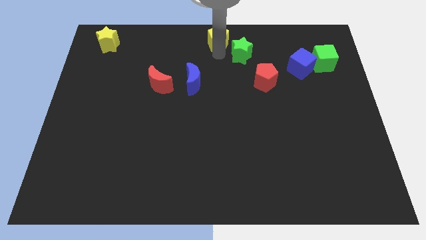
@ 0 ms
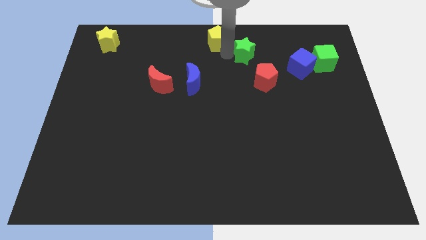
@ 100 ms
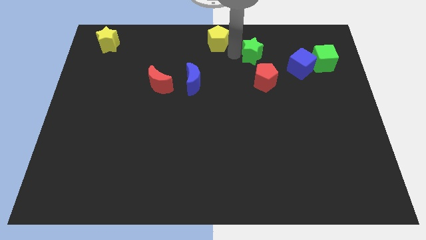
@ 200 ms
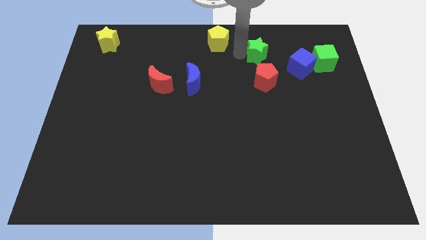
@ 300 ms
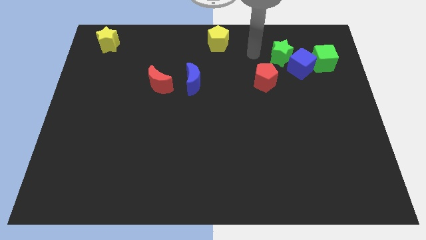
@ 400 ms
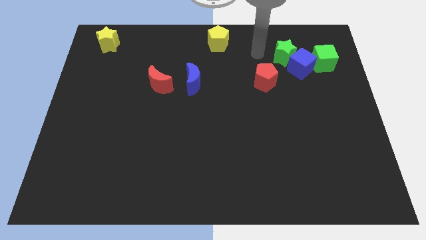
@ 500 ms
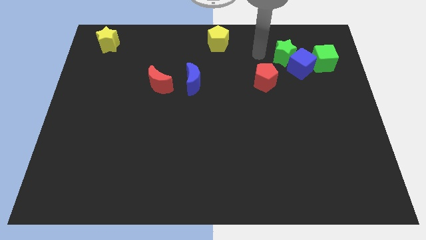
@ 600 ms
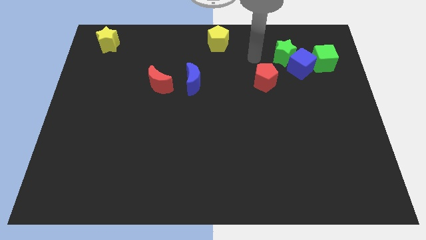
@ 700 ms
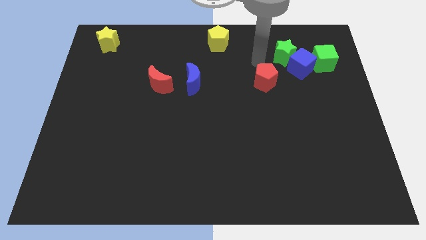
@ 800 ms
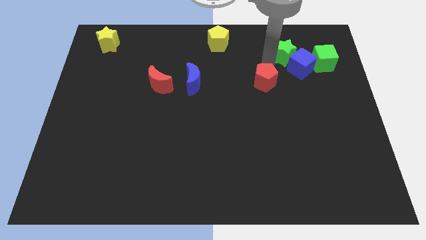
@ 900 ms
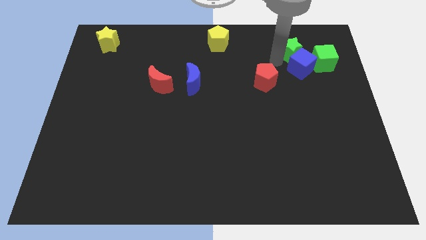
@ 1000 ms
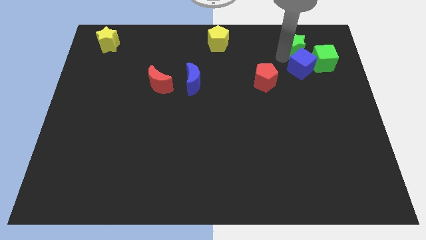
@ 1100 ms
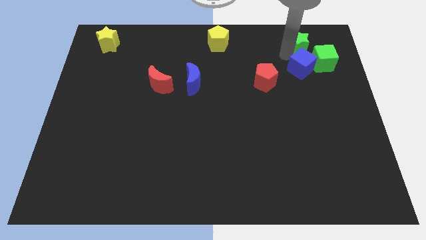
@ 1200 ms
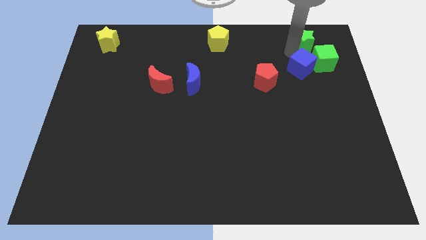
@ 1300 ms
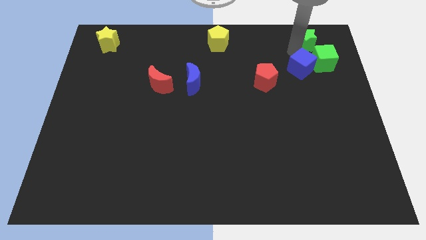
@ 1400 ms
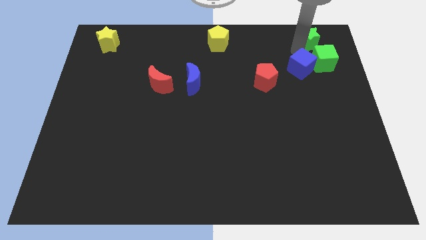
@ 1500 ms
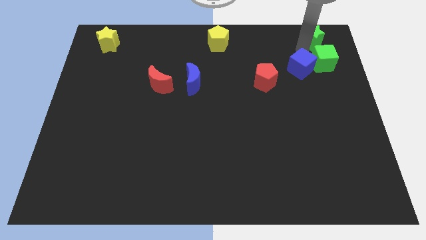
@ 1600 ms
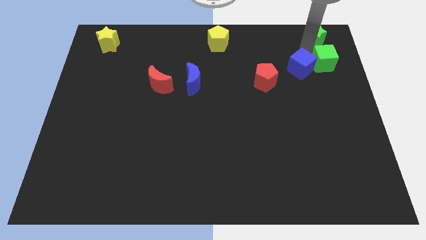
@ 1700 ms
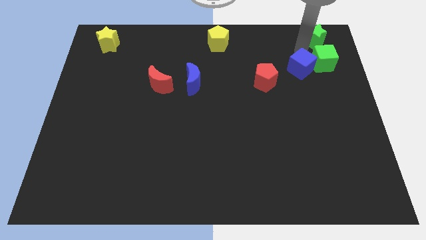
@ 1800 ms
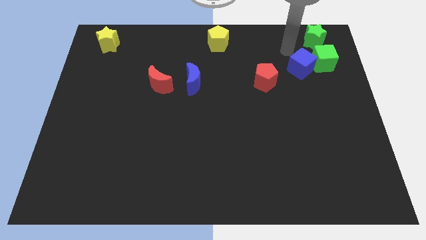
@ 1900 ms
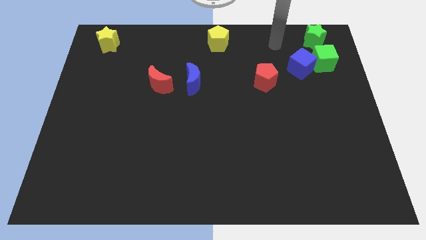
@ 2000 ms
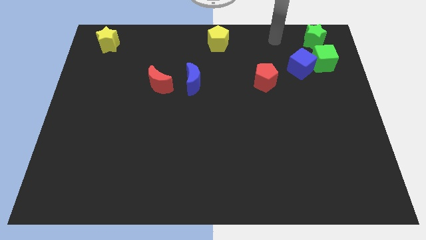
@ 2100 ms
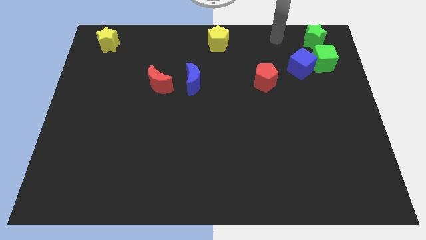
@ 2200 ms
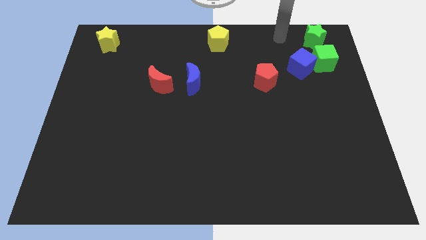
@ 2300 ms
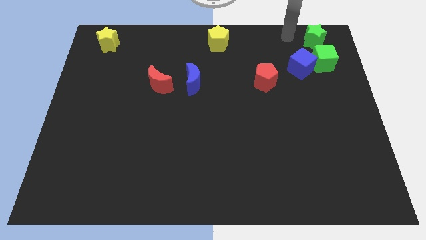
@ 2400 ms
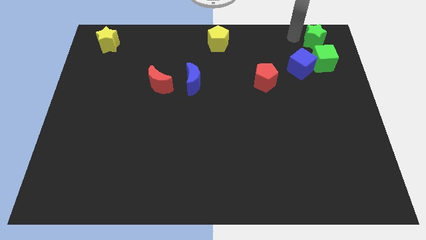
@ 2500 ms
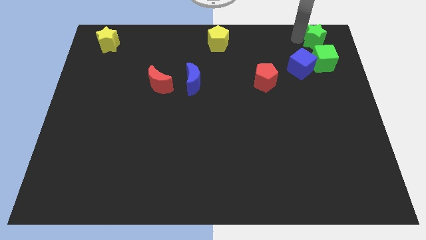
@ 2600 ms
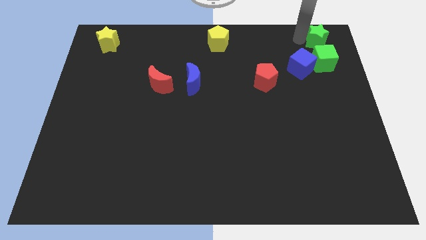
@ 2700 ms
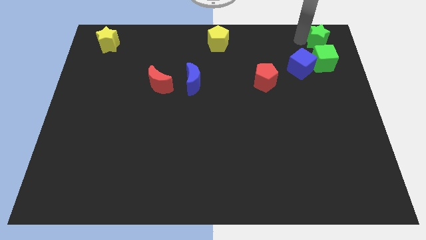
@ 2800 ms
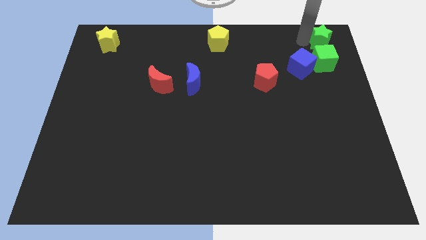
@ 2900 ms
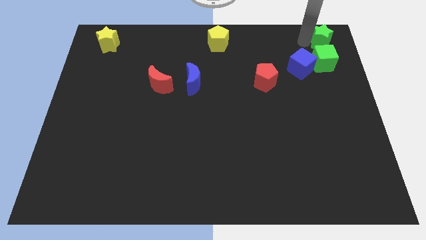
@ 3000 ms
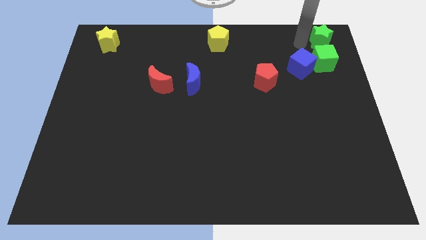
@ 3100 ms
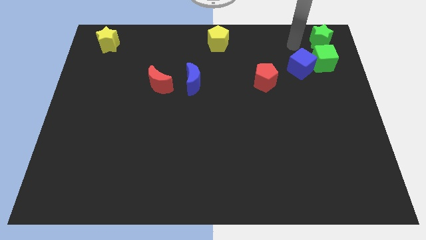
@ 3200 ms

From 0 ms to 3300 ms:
move the green star to the top of the green cube

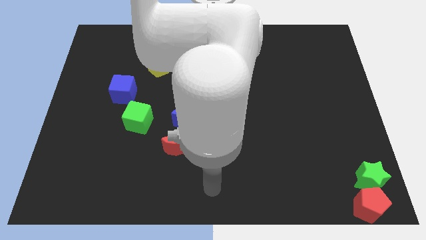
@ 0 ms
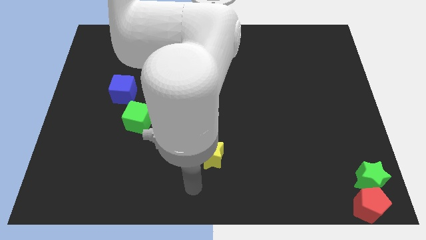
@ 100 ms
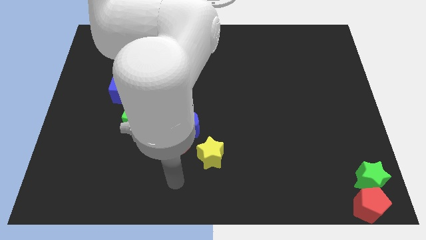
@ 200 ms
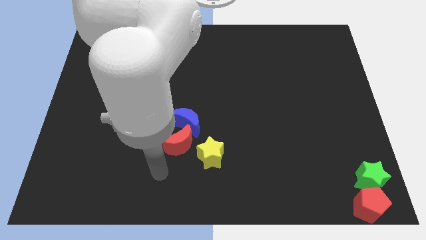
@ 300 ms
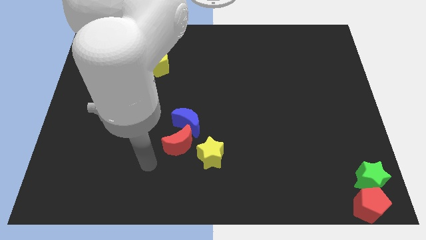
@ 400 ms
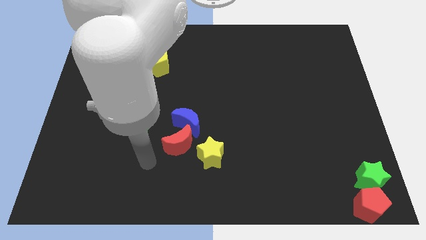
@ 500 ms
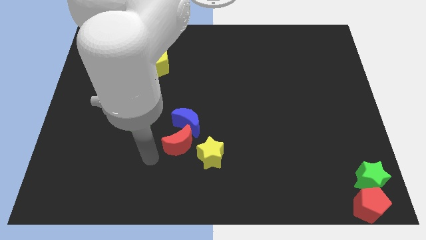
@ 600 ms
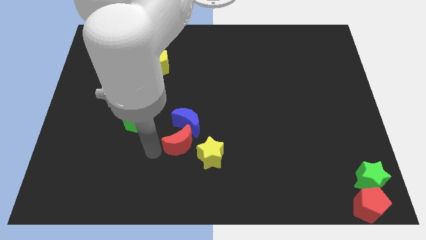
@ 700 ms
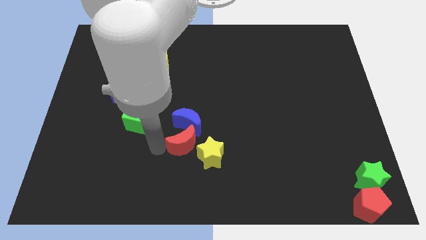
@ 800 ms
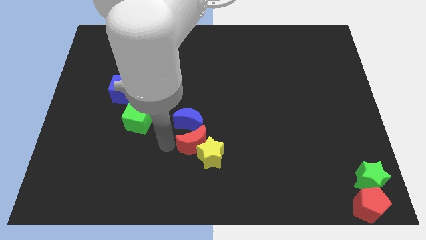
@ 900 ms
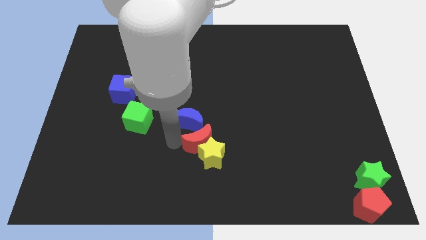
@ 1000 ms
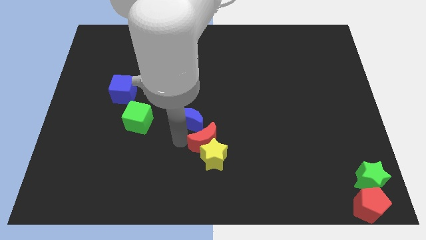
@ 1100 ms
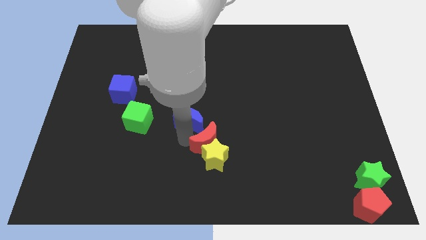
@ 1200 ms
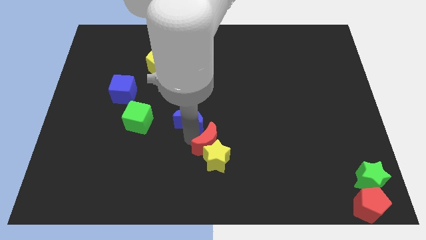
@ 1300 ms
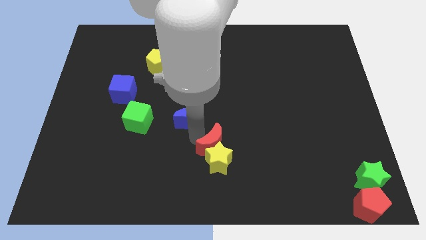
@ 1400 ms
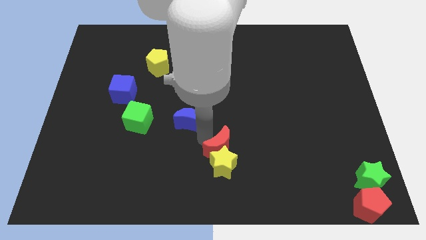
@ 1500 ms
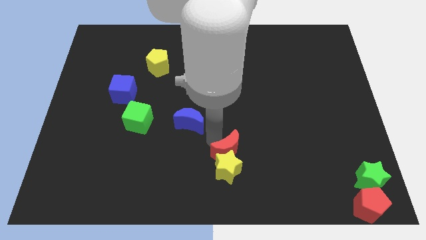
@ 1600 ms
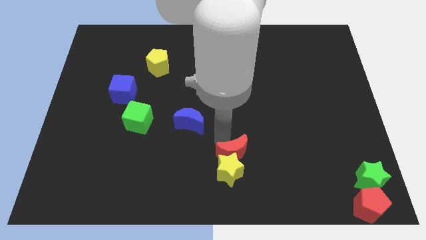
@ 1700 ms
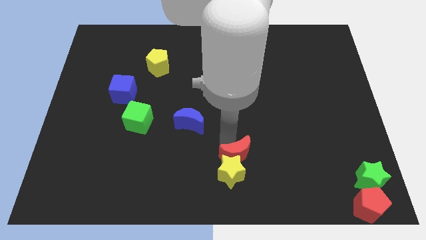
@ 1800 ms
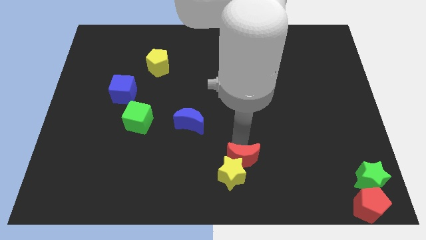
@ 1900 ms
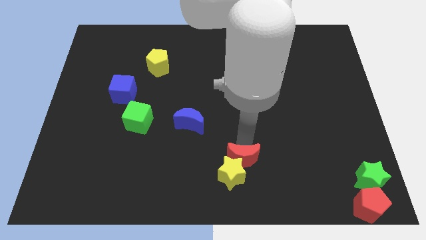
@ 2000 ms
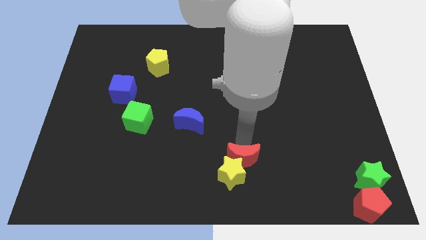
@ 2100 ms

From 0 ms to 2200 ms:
move red crescent along with yellow star towards the bottom center

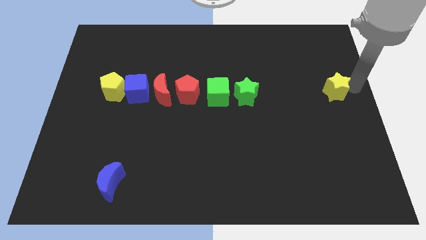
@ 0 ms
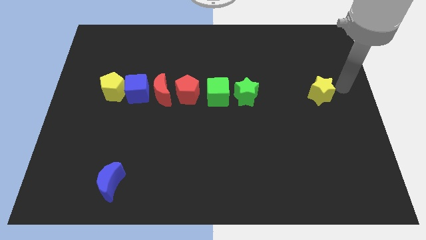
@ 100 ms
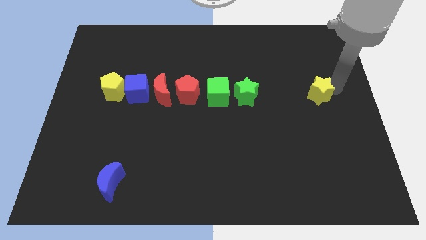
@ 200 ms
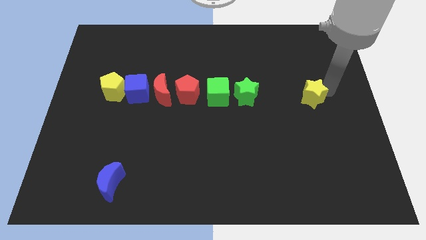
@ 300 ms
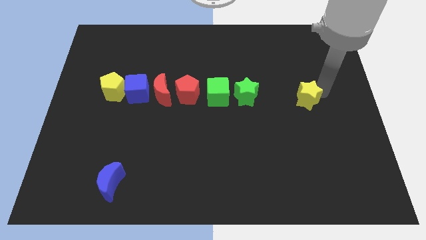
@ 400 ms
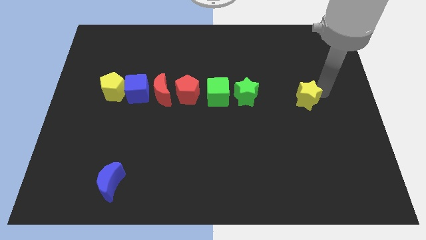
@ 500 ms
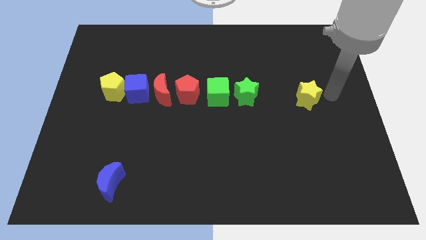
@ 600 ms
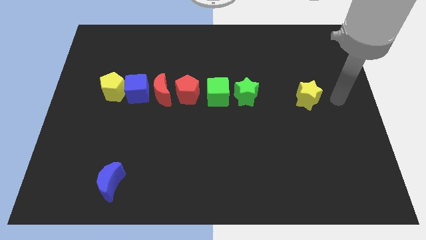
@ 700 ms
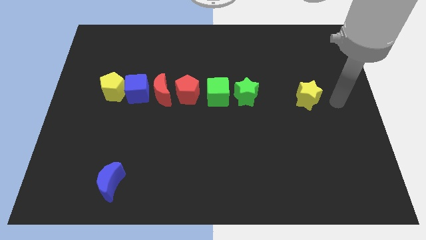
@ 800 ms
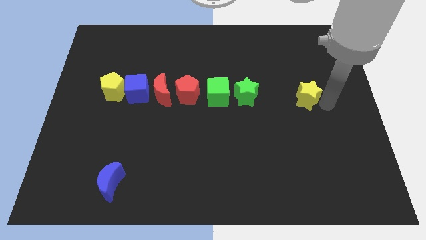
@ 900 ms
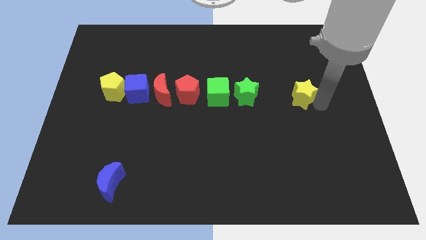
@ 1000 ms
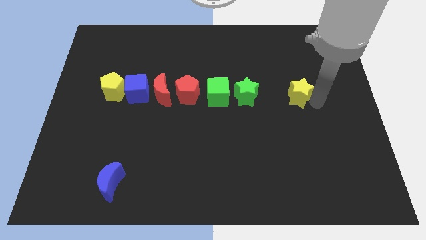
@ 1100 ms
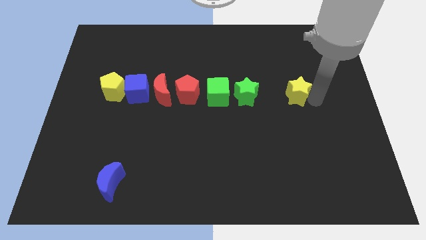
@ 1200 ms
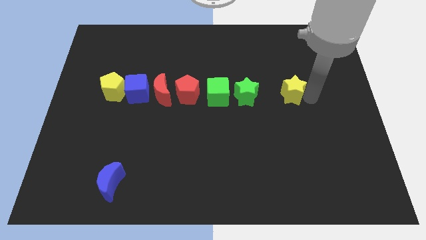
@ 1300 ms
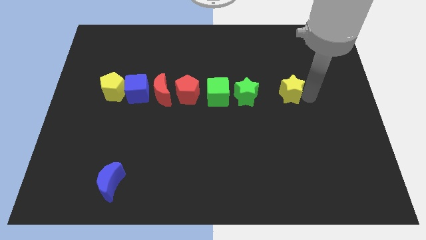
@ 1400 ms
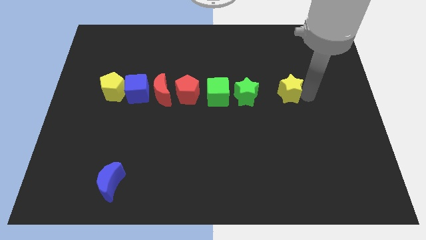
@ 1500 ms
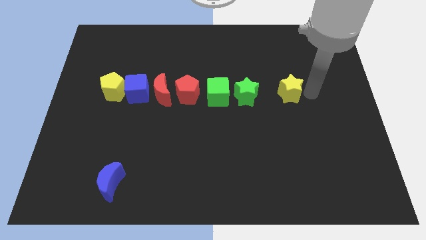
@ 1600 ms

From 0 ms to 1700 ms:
push the yellow star to the left of the board

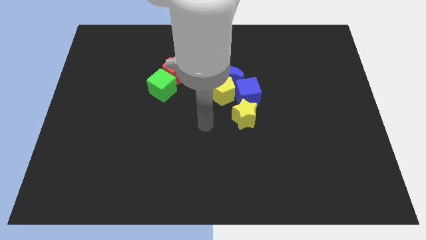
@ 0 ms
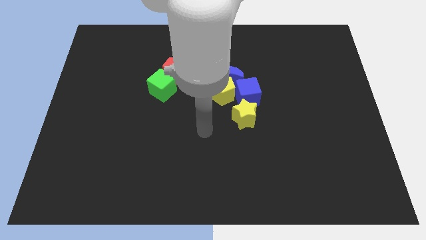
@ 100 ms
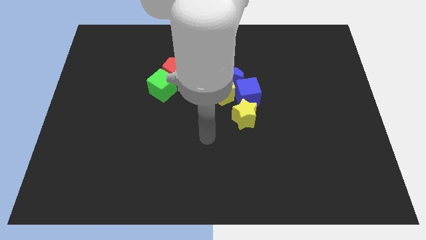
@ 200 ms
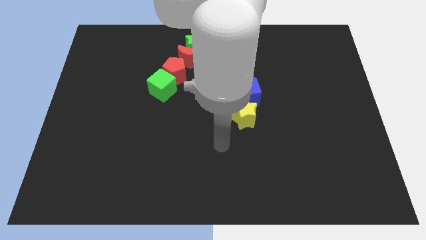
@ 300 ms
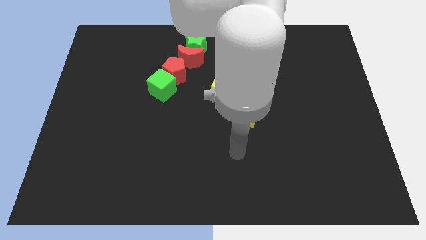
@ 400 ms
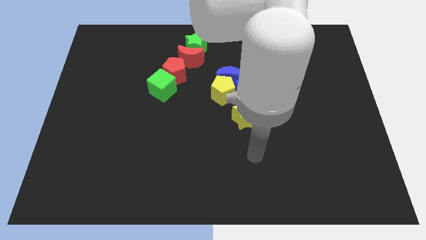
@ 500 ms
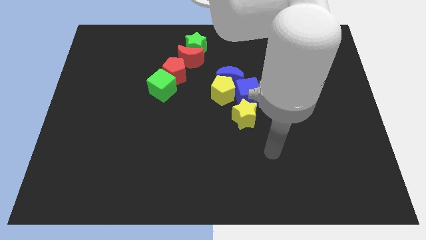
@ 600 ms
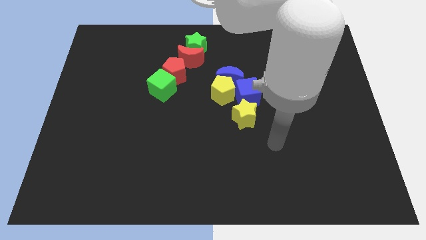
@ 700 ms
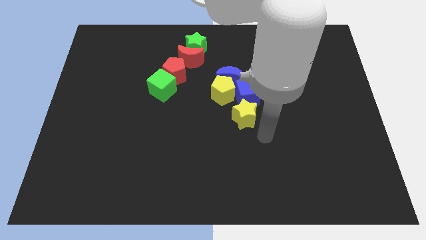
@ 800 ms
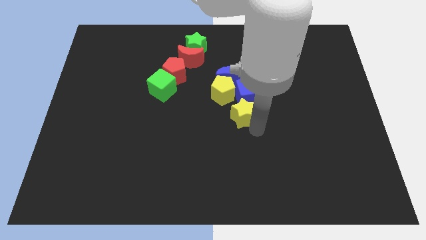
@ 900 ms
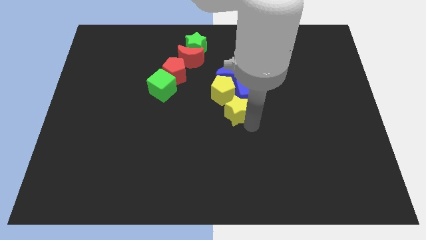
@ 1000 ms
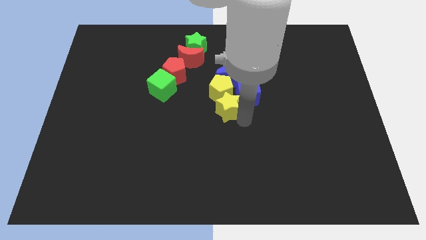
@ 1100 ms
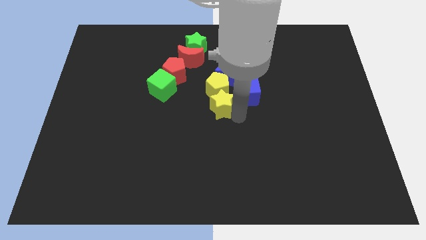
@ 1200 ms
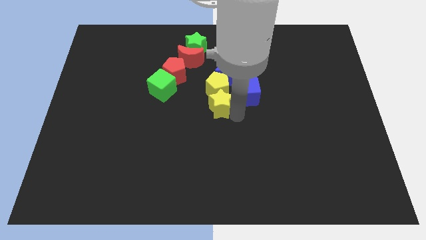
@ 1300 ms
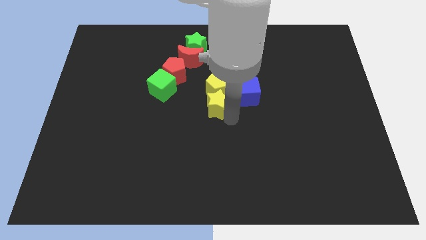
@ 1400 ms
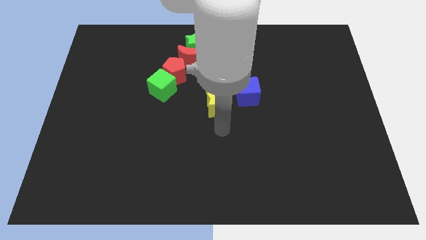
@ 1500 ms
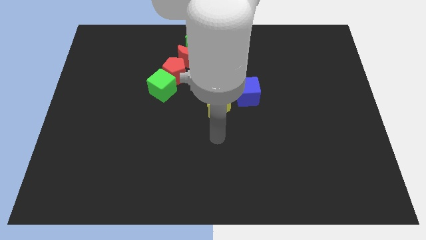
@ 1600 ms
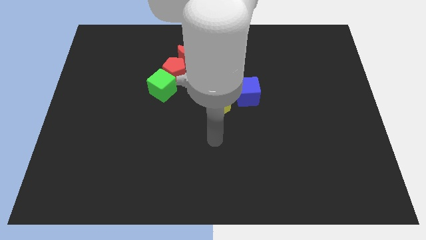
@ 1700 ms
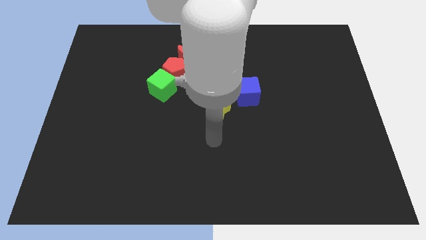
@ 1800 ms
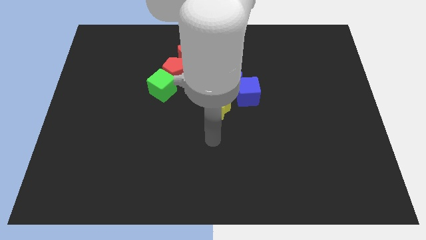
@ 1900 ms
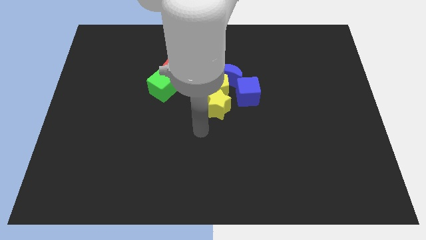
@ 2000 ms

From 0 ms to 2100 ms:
move yellow star close to the yellow pentagon
